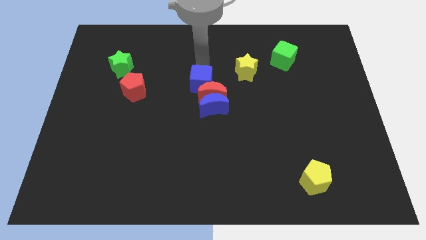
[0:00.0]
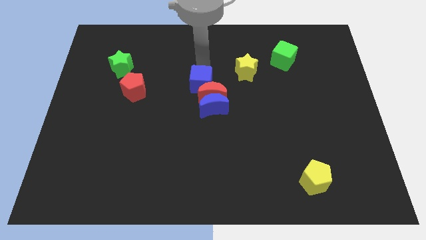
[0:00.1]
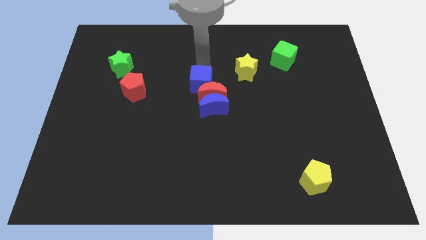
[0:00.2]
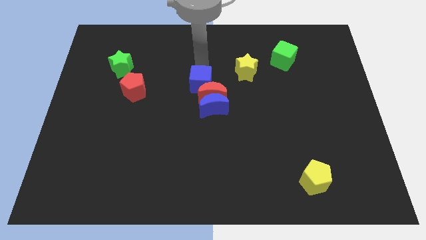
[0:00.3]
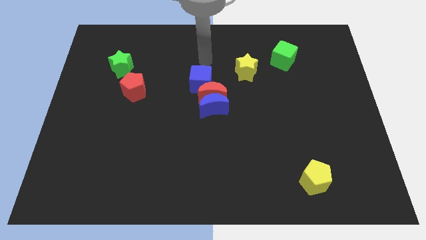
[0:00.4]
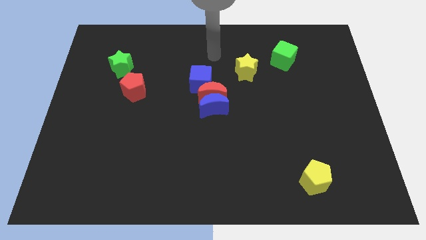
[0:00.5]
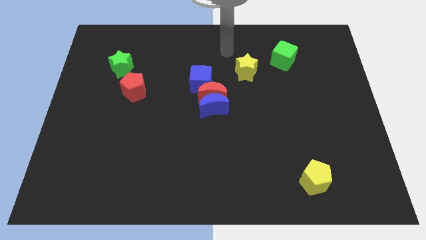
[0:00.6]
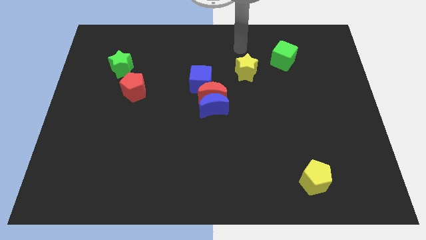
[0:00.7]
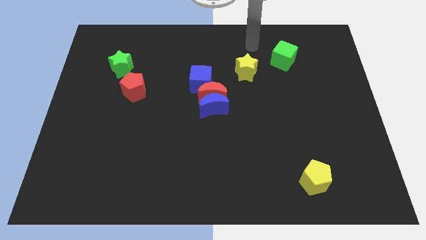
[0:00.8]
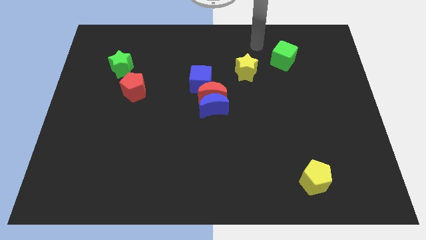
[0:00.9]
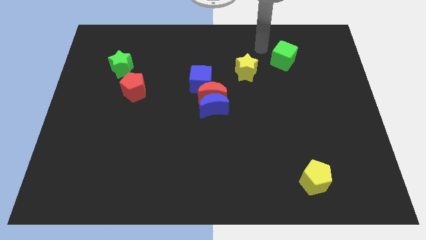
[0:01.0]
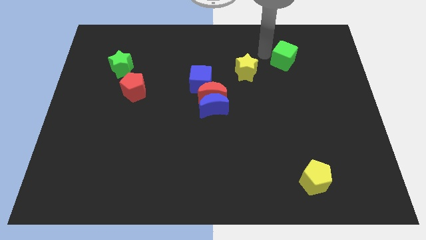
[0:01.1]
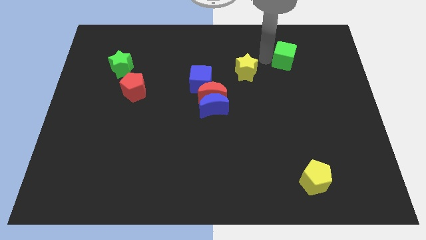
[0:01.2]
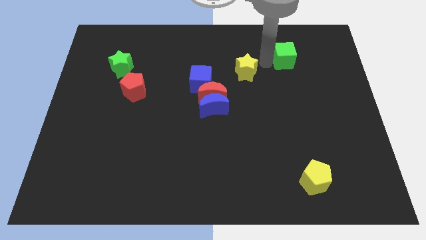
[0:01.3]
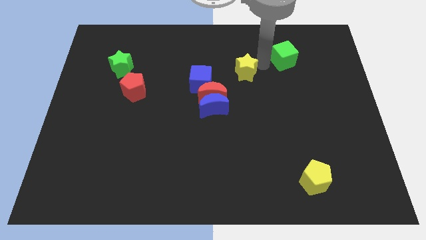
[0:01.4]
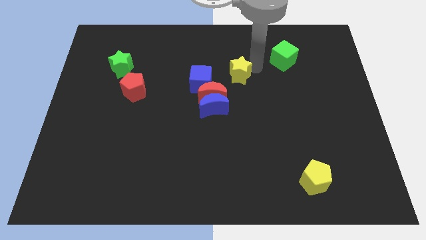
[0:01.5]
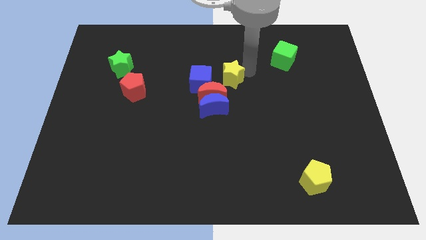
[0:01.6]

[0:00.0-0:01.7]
move yellow star to the right of blue cube

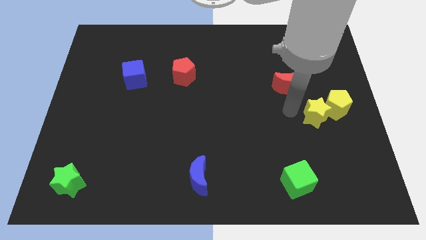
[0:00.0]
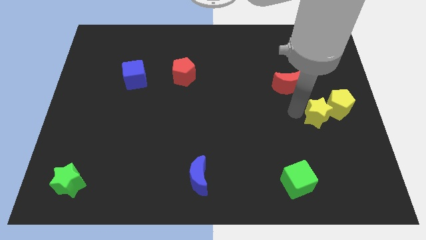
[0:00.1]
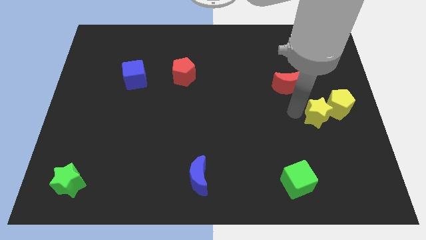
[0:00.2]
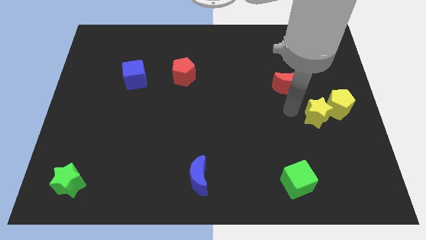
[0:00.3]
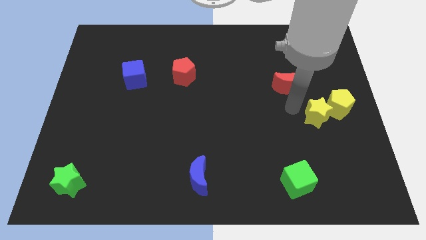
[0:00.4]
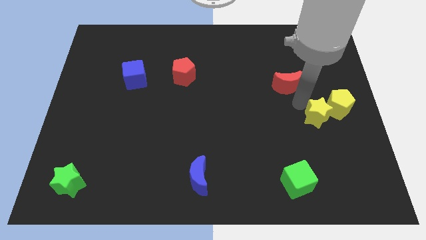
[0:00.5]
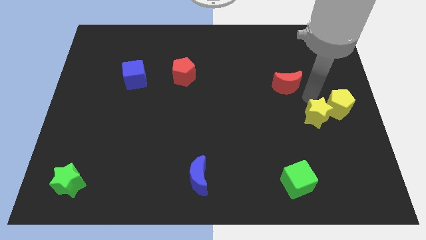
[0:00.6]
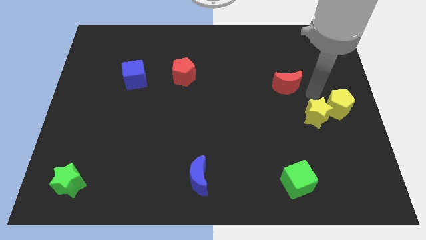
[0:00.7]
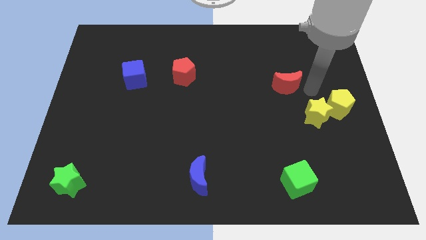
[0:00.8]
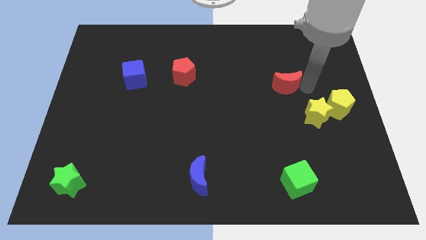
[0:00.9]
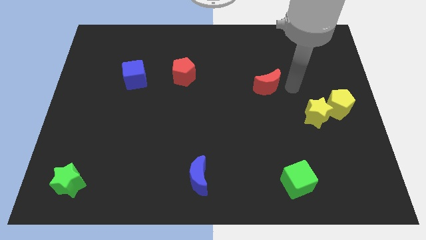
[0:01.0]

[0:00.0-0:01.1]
move the arm towards the red crescent

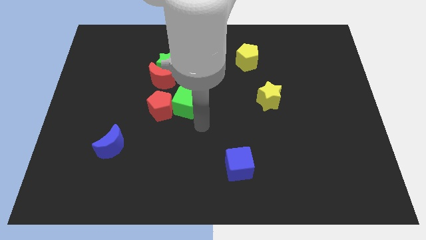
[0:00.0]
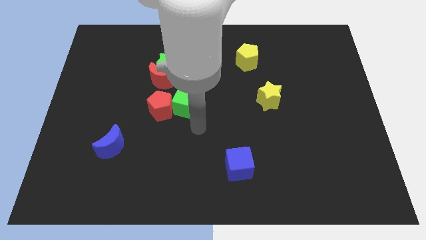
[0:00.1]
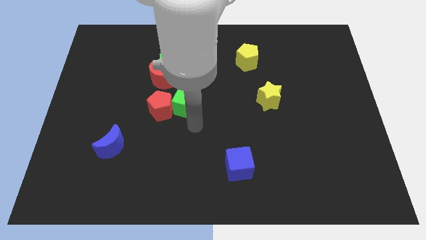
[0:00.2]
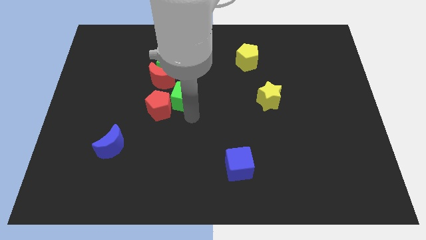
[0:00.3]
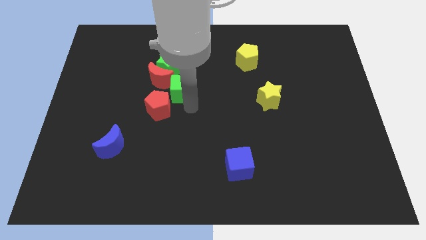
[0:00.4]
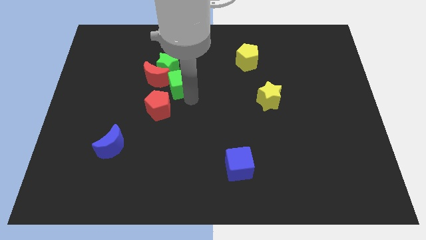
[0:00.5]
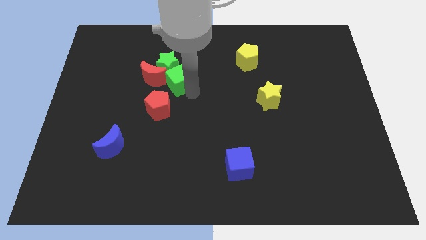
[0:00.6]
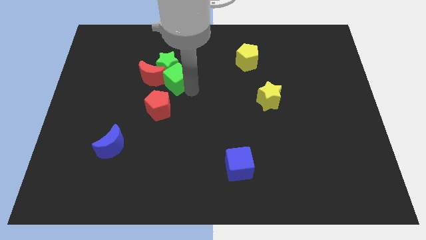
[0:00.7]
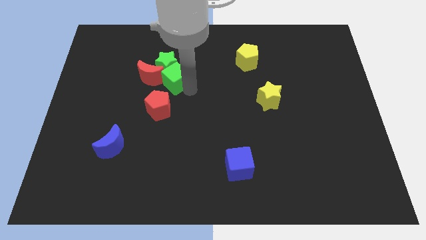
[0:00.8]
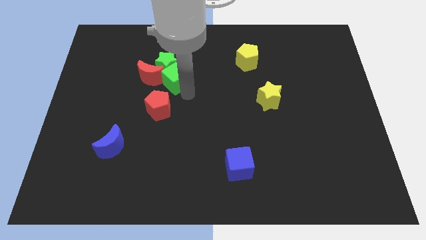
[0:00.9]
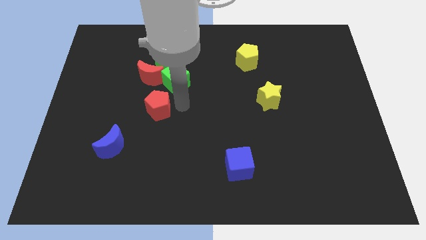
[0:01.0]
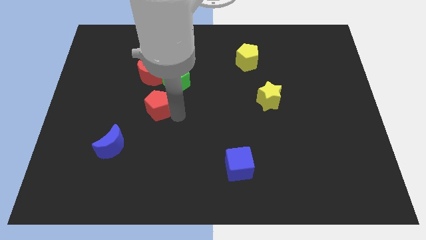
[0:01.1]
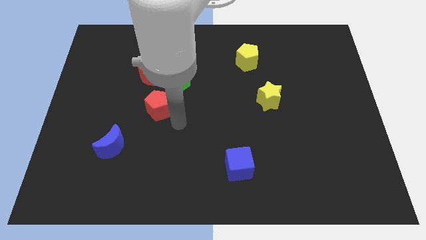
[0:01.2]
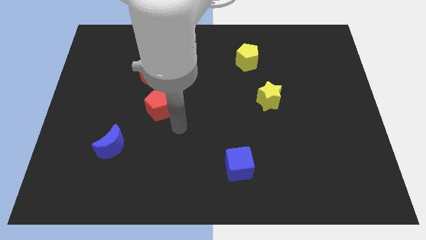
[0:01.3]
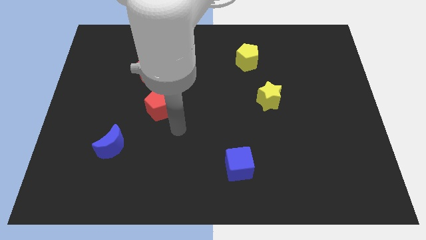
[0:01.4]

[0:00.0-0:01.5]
push the green cube under the green star

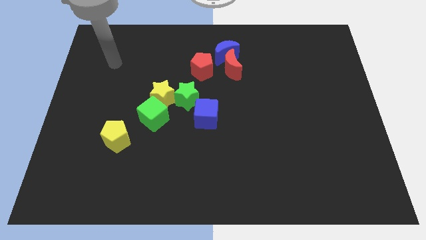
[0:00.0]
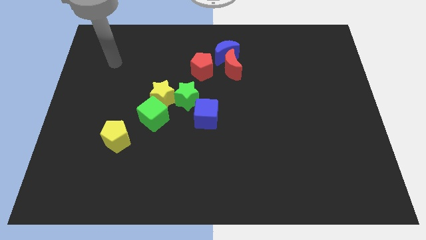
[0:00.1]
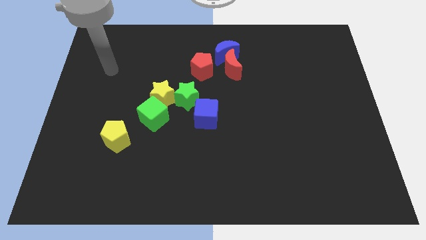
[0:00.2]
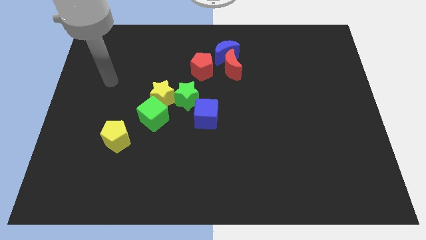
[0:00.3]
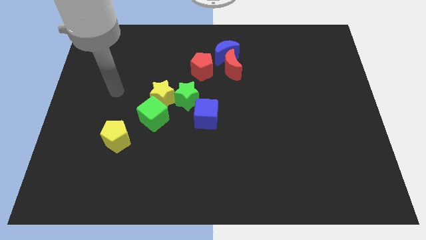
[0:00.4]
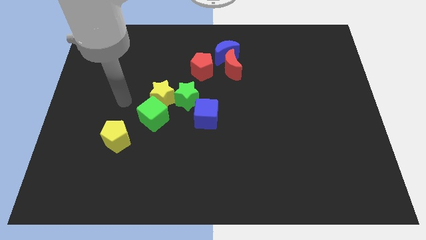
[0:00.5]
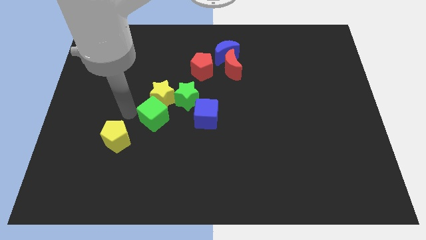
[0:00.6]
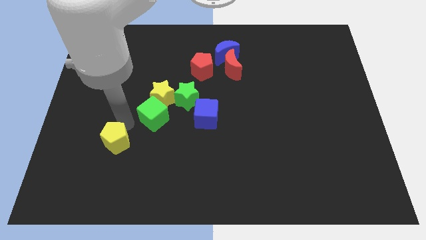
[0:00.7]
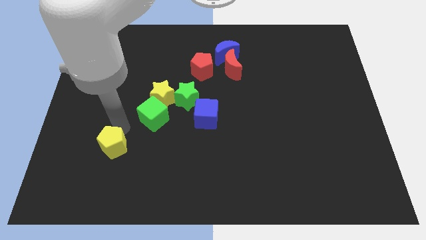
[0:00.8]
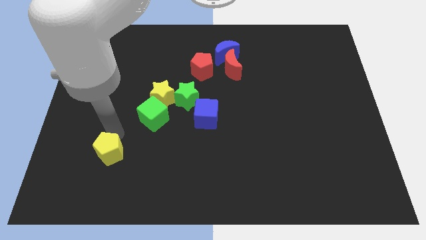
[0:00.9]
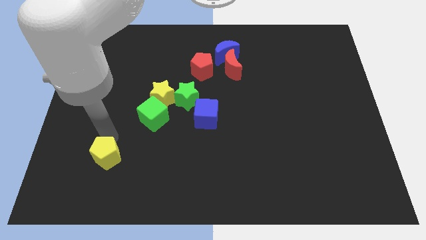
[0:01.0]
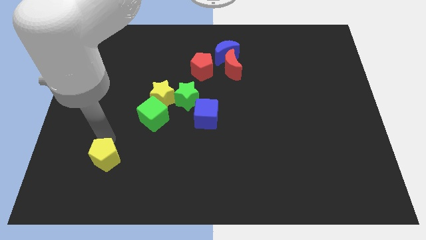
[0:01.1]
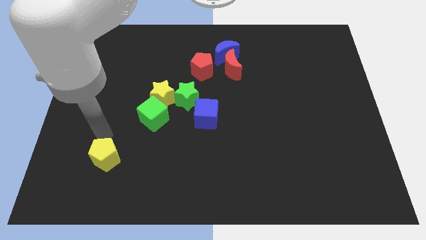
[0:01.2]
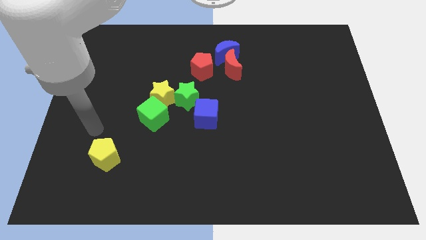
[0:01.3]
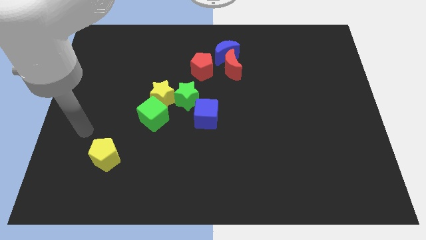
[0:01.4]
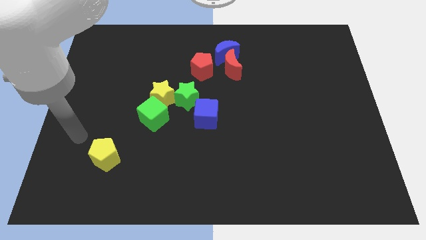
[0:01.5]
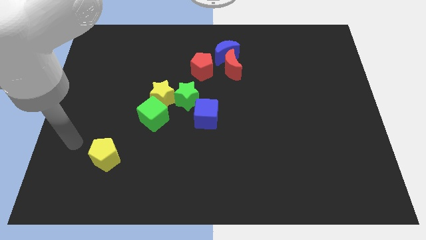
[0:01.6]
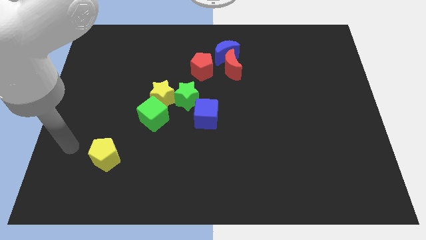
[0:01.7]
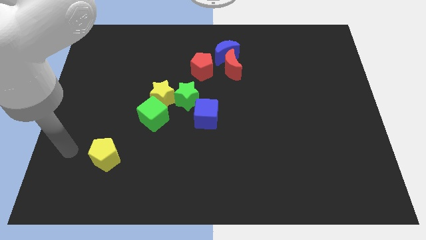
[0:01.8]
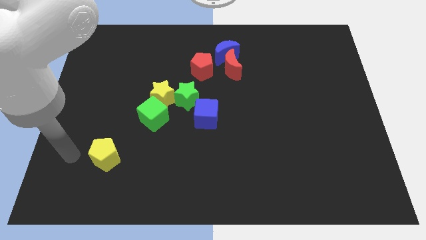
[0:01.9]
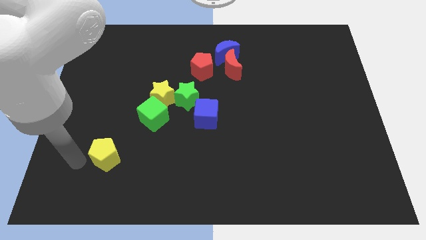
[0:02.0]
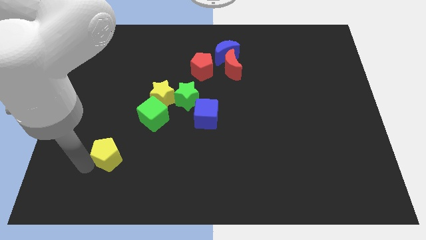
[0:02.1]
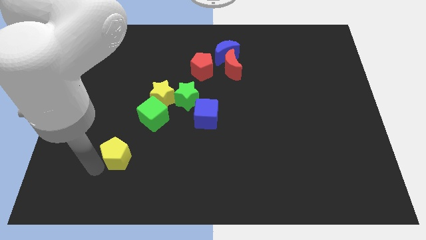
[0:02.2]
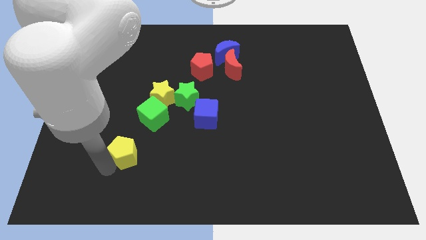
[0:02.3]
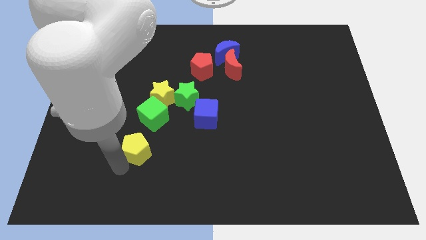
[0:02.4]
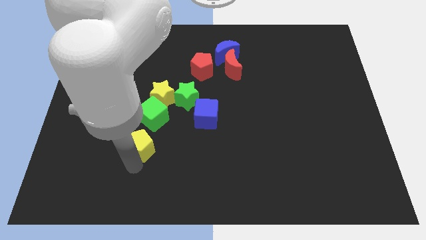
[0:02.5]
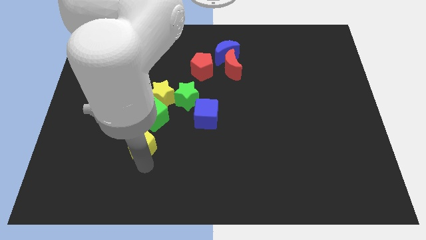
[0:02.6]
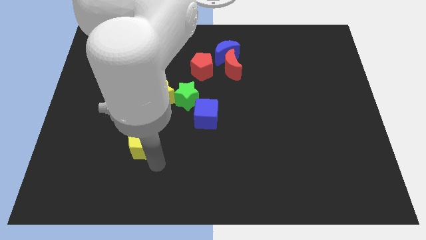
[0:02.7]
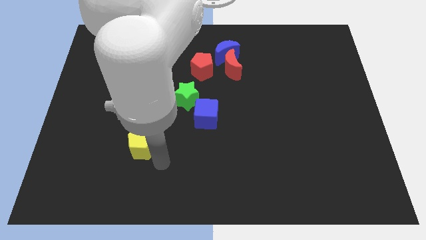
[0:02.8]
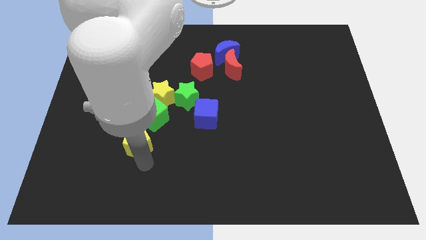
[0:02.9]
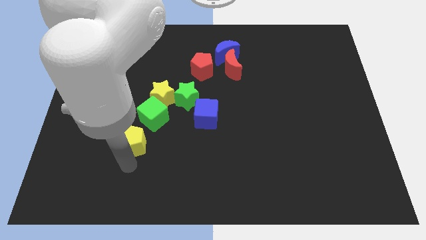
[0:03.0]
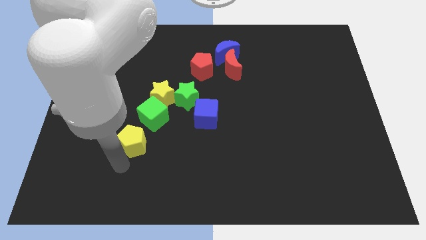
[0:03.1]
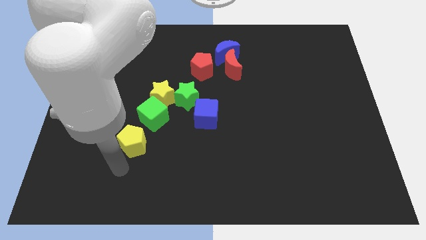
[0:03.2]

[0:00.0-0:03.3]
move the yellow pentagon close to the green cube

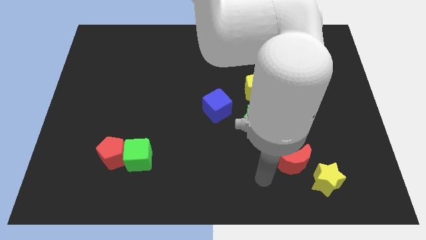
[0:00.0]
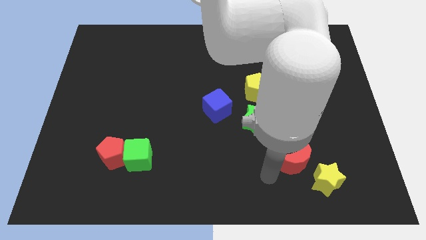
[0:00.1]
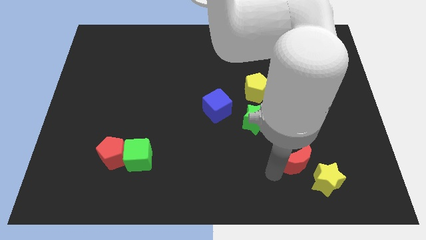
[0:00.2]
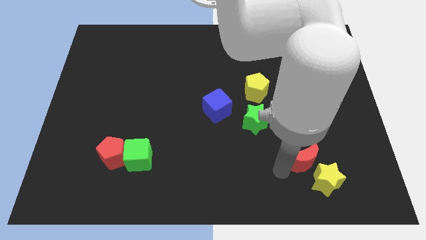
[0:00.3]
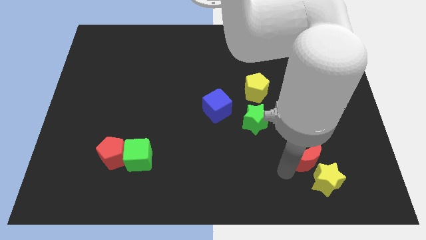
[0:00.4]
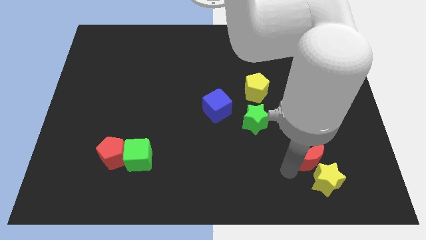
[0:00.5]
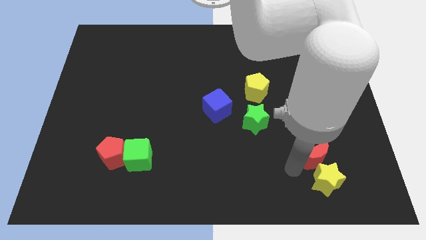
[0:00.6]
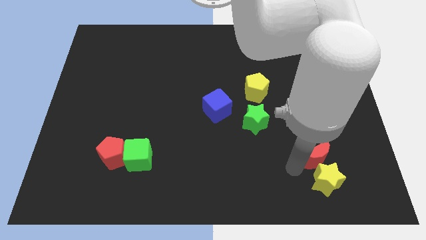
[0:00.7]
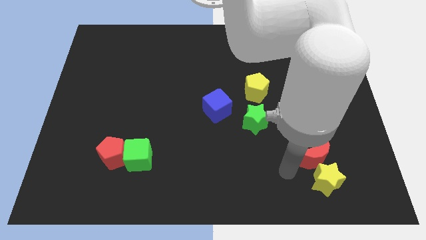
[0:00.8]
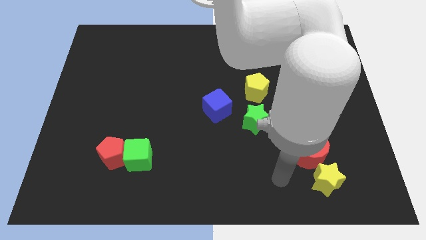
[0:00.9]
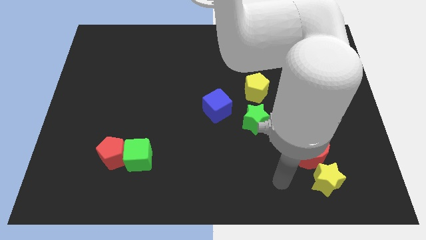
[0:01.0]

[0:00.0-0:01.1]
move the red crescent close to the yellow star

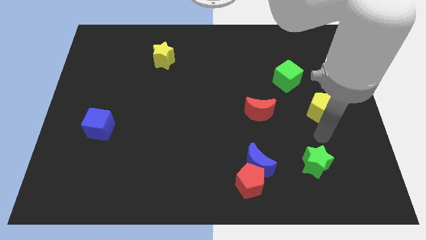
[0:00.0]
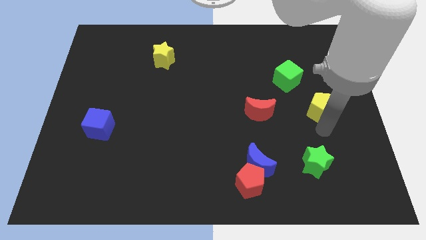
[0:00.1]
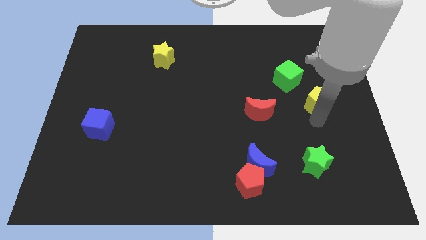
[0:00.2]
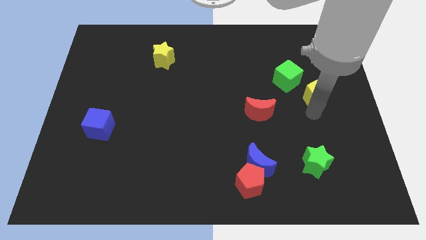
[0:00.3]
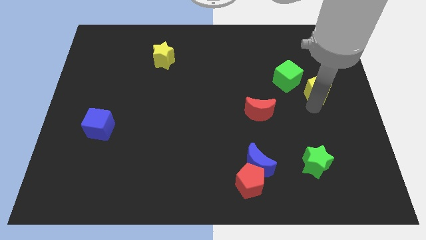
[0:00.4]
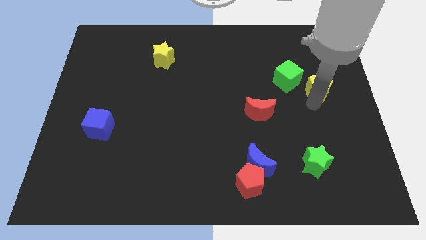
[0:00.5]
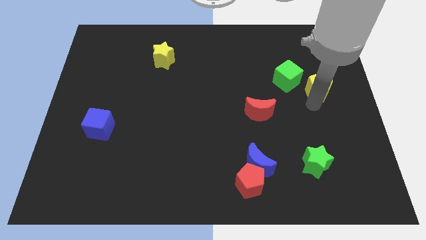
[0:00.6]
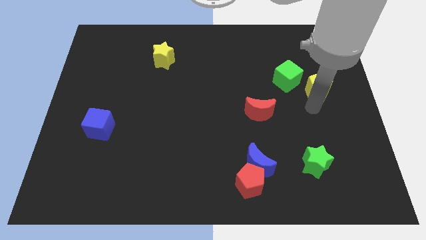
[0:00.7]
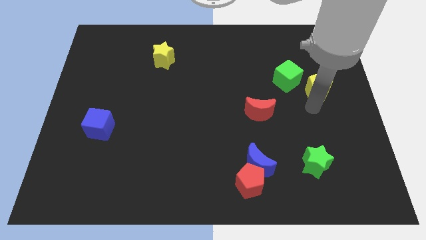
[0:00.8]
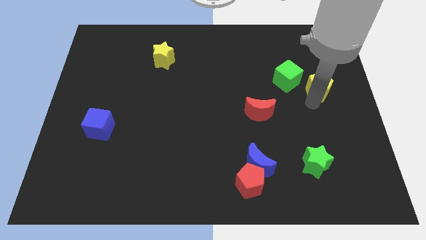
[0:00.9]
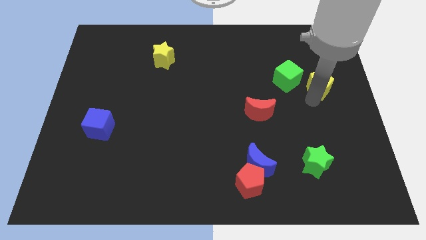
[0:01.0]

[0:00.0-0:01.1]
push yellow pentagon towards green cube
